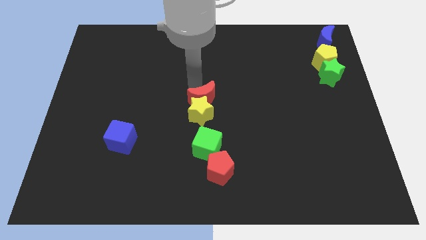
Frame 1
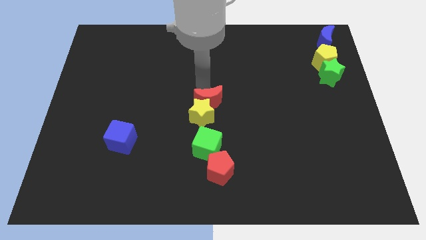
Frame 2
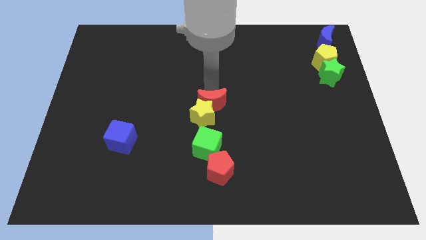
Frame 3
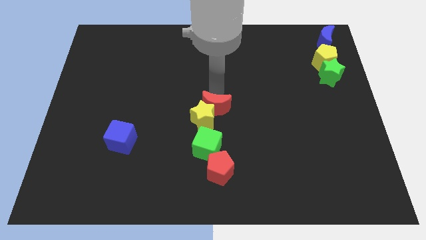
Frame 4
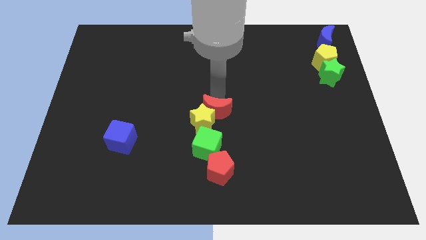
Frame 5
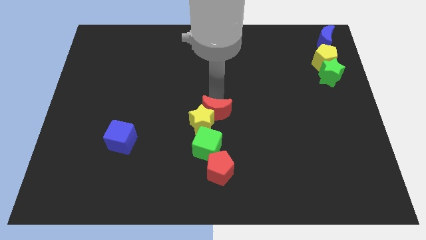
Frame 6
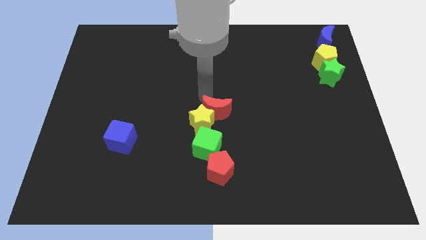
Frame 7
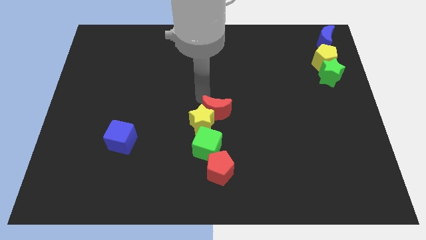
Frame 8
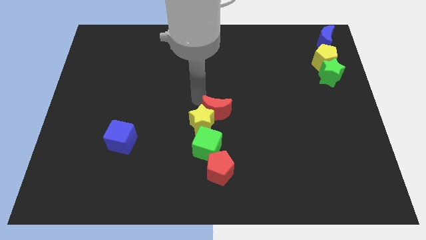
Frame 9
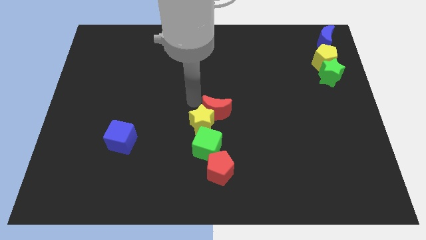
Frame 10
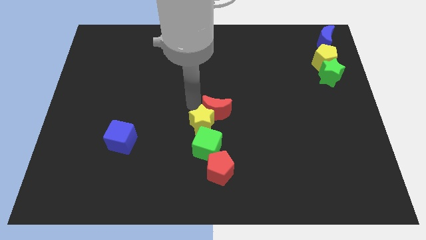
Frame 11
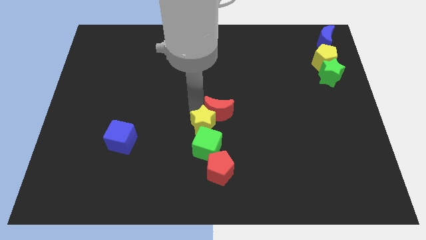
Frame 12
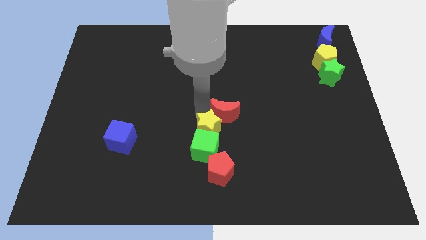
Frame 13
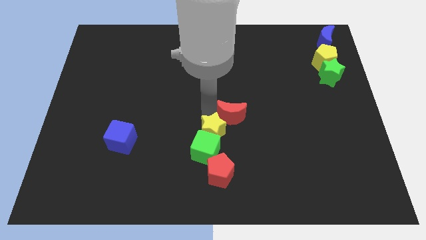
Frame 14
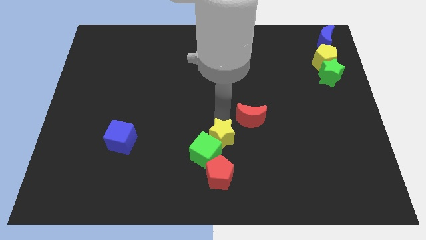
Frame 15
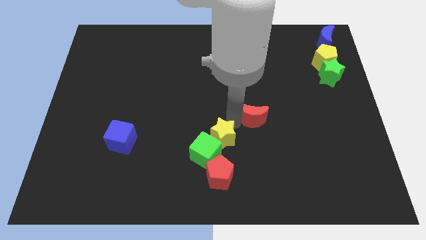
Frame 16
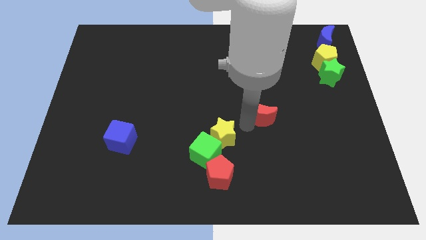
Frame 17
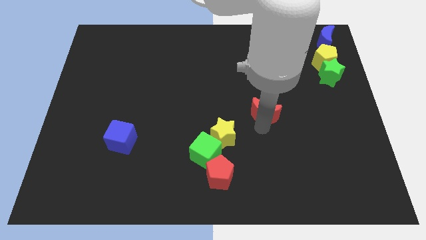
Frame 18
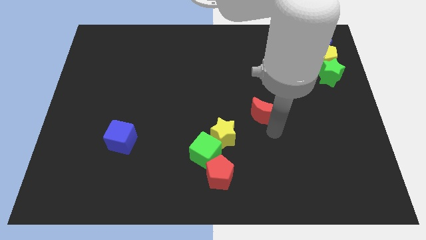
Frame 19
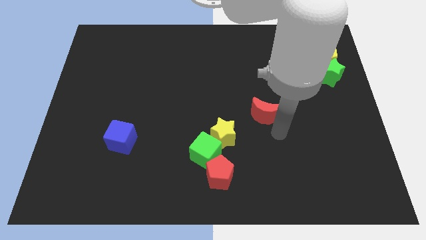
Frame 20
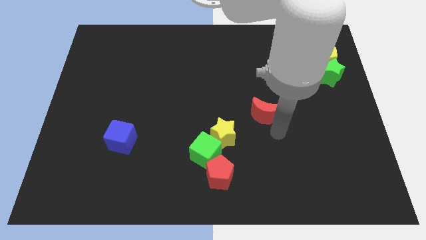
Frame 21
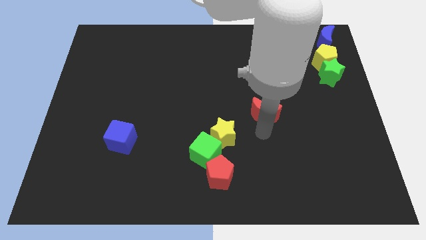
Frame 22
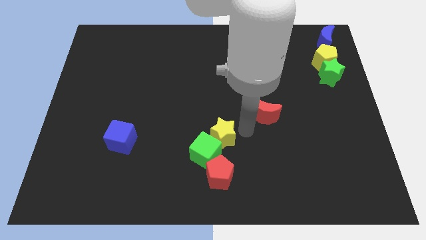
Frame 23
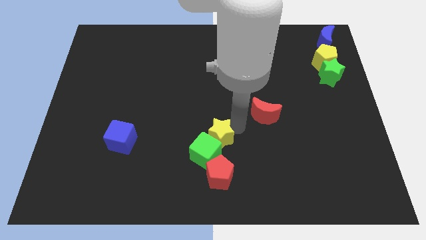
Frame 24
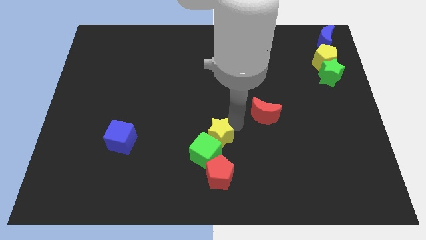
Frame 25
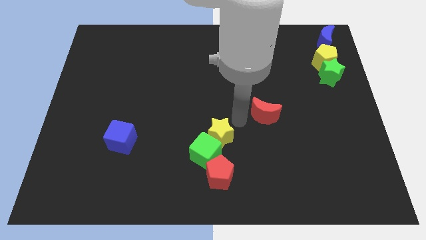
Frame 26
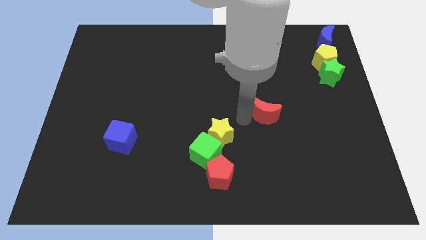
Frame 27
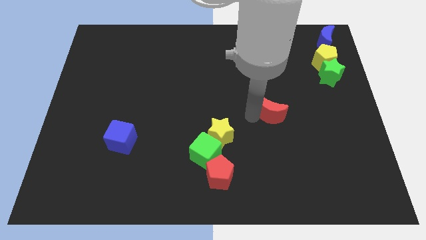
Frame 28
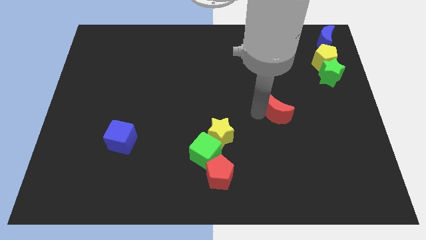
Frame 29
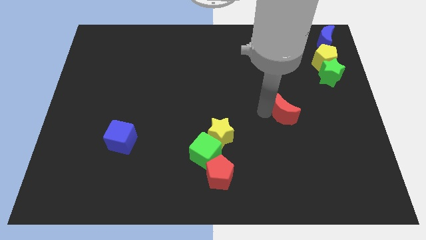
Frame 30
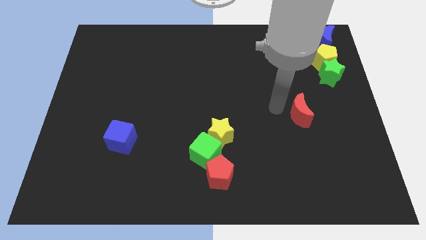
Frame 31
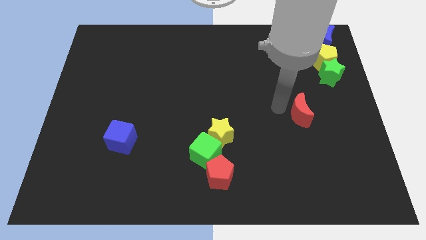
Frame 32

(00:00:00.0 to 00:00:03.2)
push the red crescent away from the yellow star

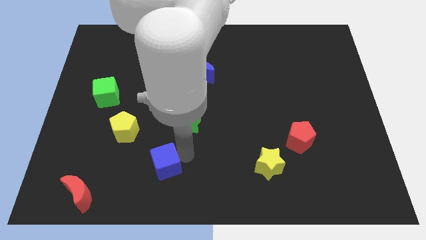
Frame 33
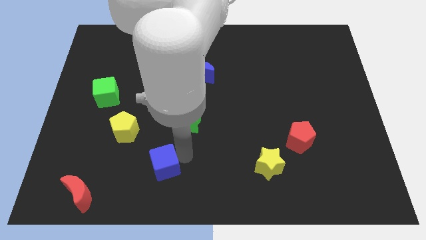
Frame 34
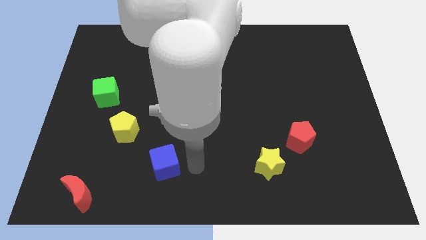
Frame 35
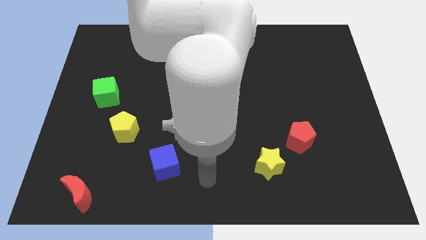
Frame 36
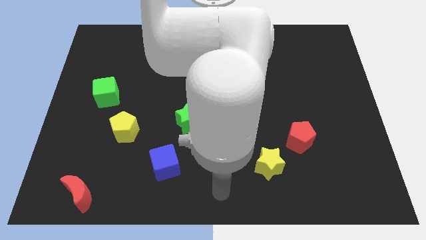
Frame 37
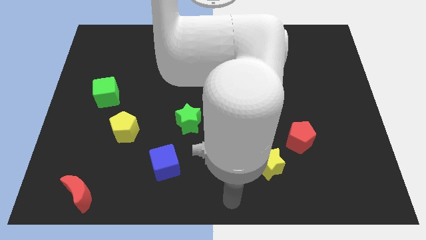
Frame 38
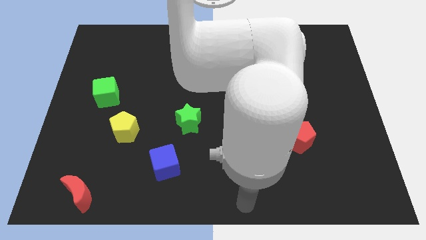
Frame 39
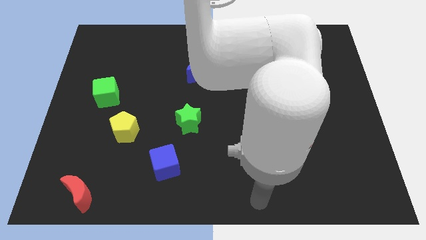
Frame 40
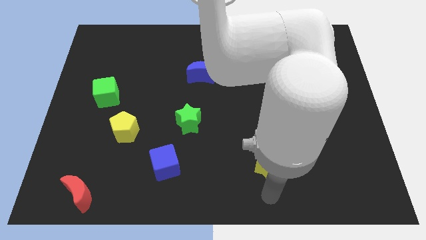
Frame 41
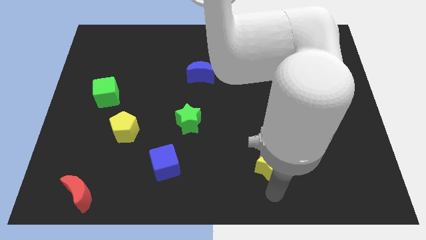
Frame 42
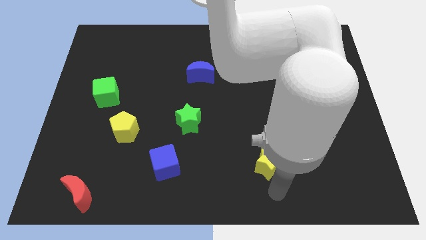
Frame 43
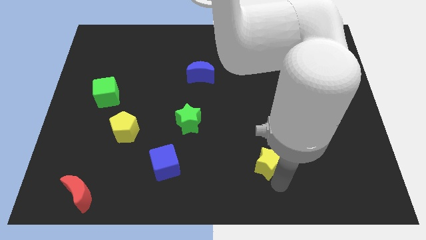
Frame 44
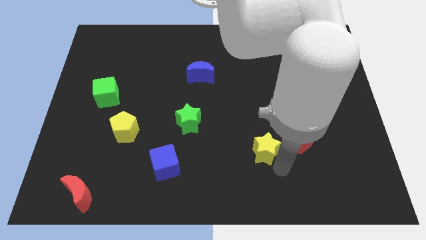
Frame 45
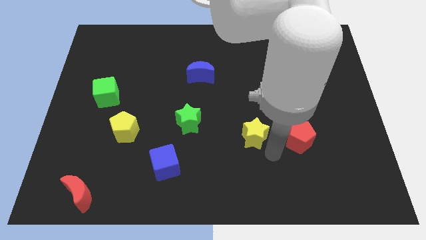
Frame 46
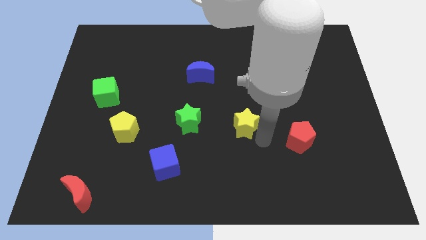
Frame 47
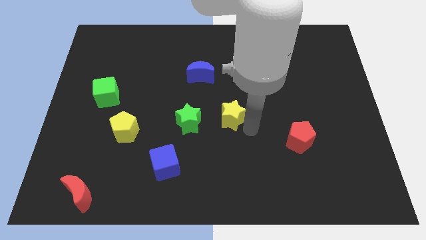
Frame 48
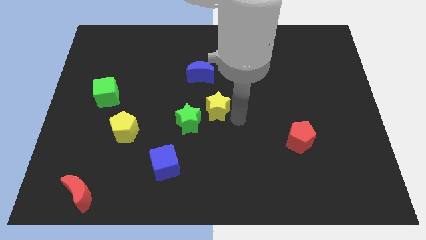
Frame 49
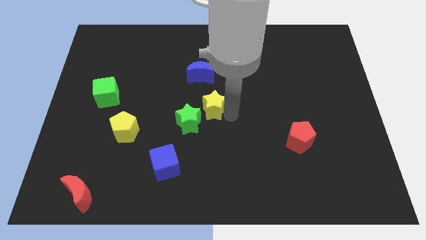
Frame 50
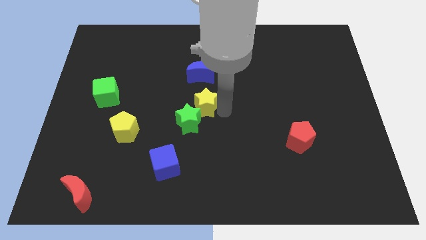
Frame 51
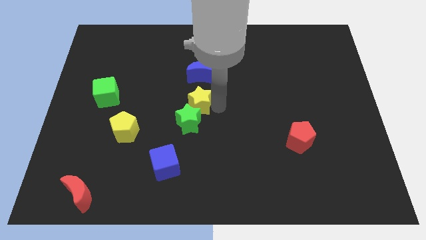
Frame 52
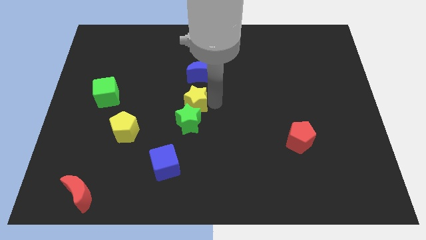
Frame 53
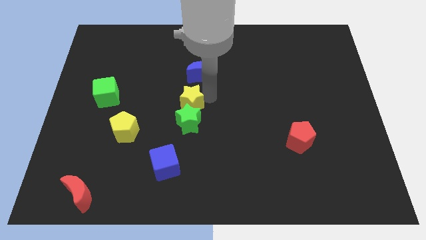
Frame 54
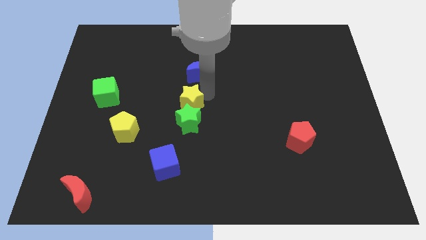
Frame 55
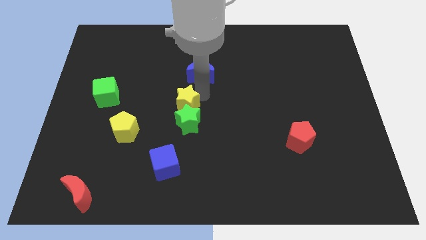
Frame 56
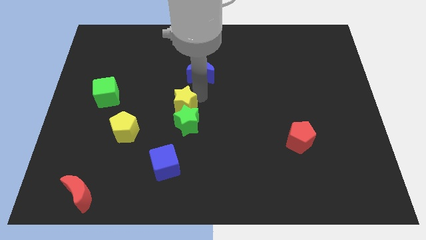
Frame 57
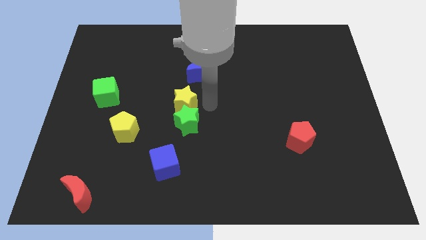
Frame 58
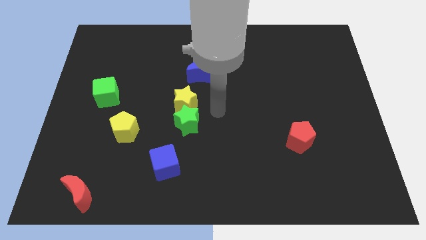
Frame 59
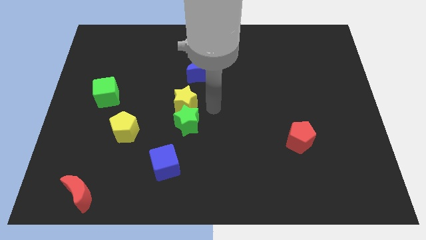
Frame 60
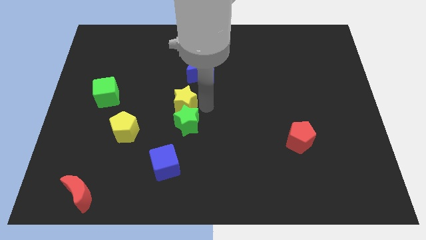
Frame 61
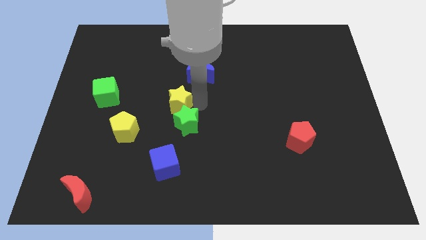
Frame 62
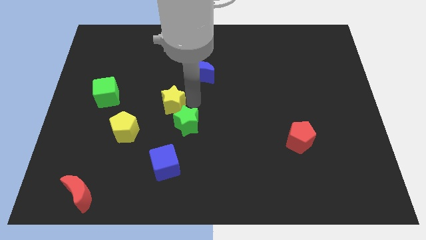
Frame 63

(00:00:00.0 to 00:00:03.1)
bring the yellow star at the top side of the green star

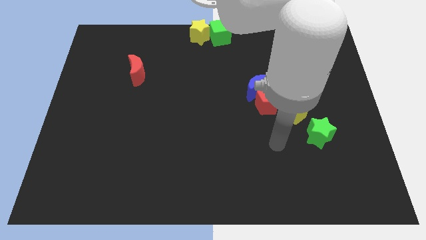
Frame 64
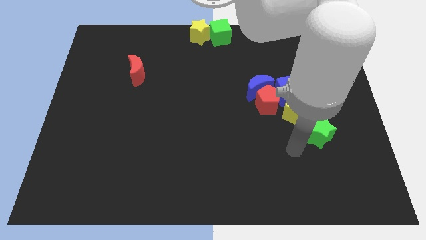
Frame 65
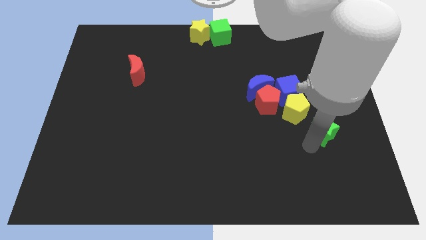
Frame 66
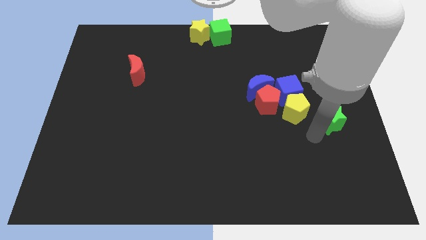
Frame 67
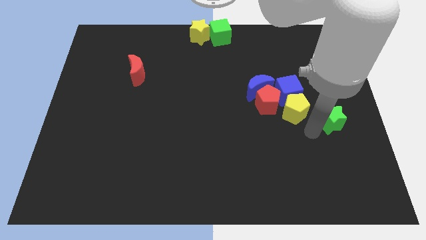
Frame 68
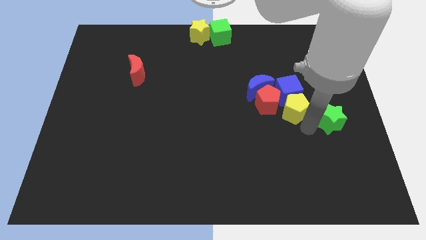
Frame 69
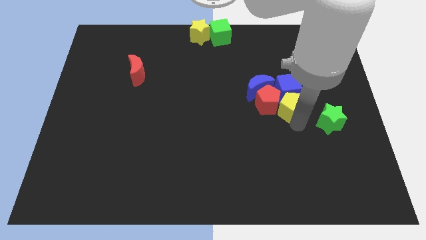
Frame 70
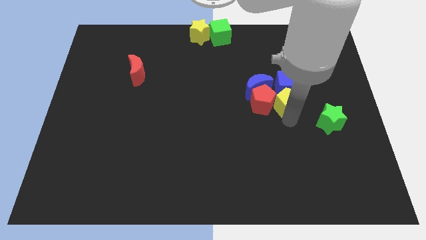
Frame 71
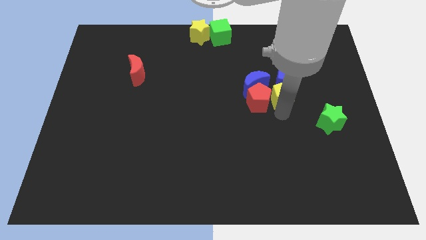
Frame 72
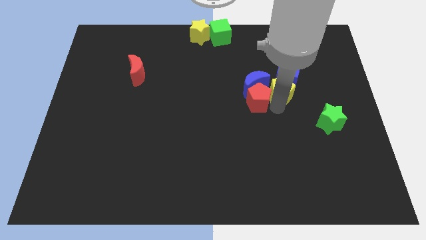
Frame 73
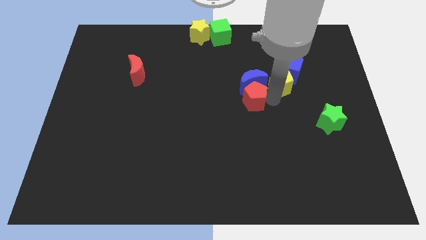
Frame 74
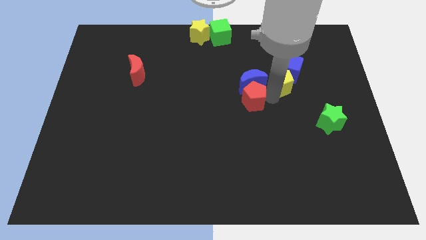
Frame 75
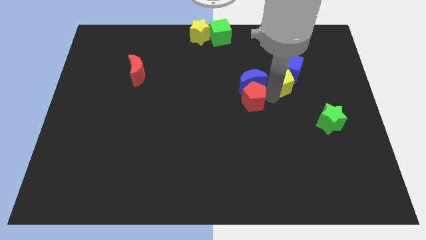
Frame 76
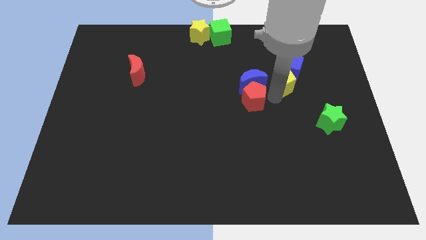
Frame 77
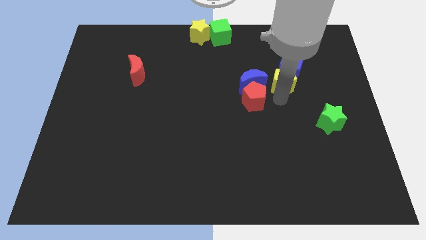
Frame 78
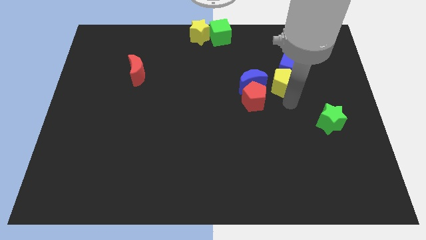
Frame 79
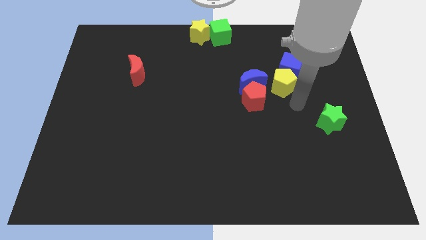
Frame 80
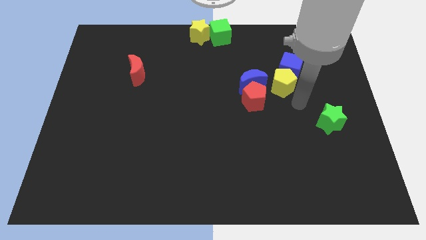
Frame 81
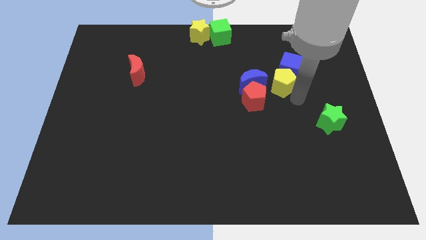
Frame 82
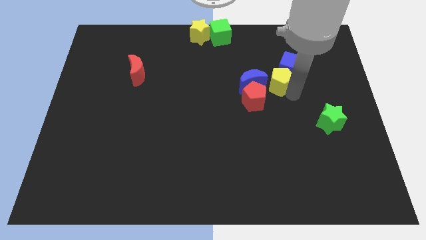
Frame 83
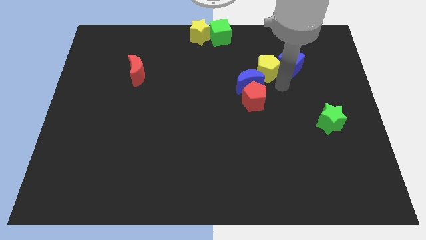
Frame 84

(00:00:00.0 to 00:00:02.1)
push the yellow pentagon along with the blue cube slightly to the top

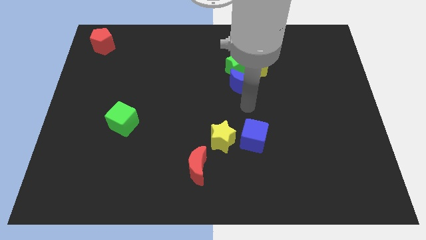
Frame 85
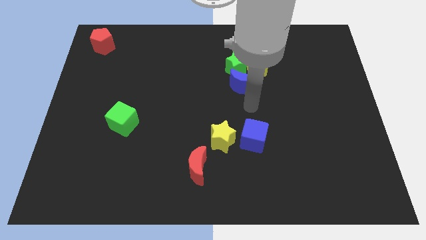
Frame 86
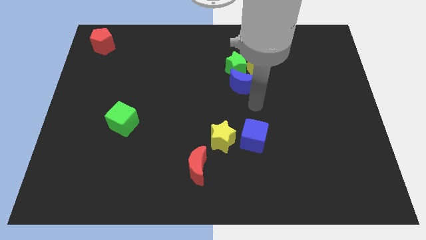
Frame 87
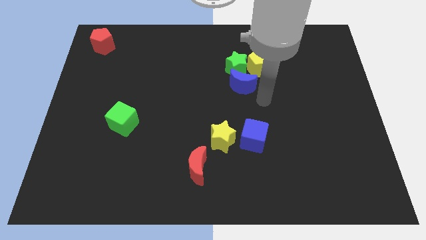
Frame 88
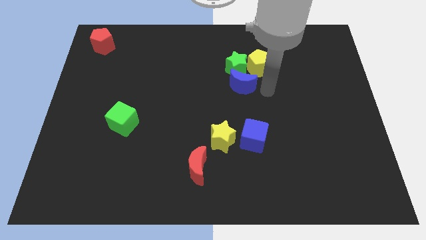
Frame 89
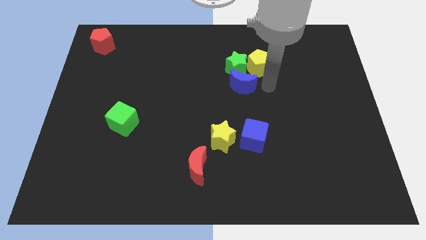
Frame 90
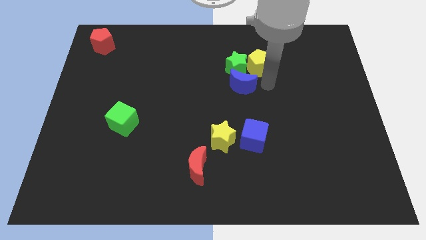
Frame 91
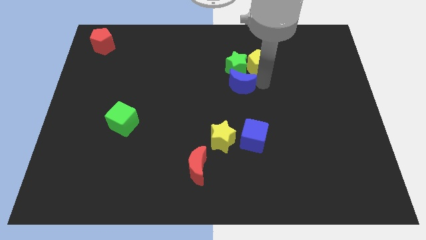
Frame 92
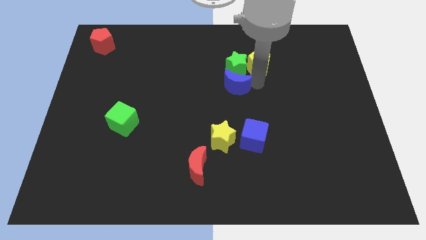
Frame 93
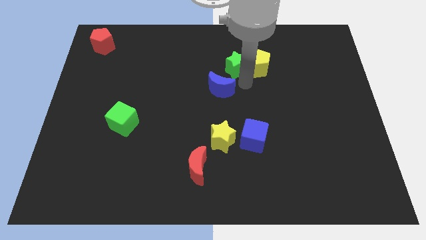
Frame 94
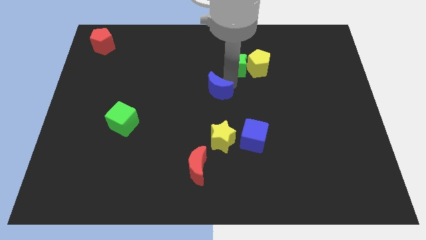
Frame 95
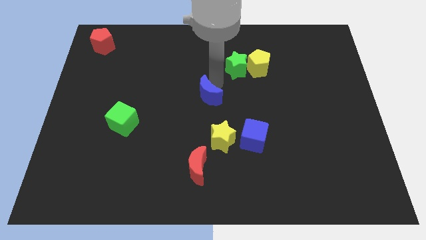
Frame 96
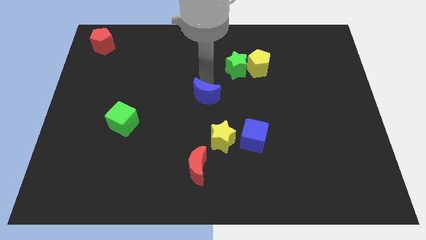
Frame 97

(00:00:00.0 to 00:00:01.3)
move the blue semi circle towards the green cube
